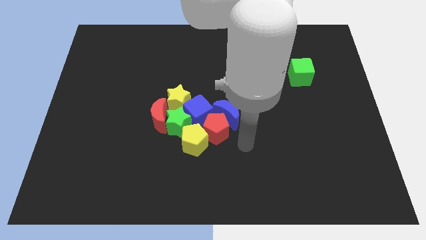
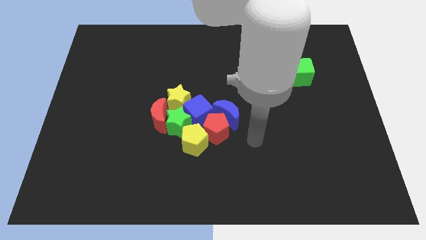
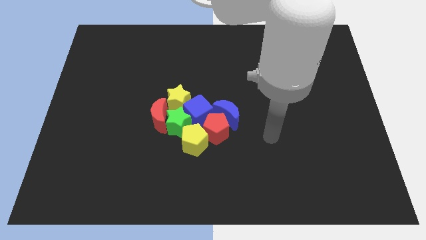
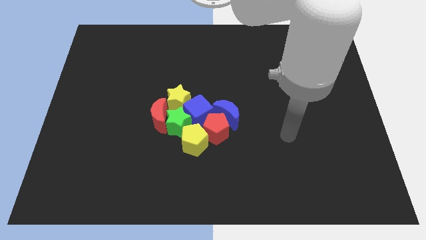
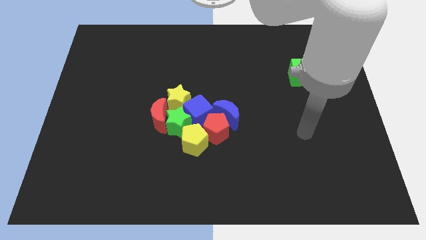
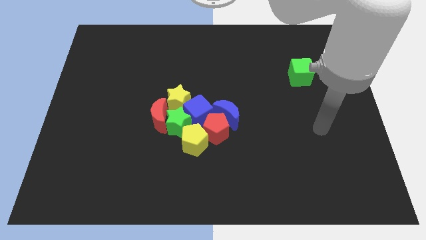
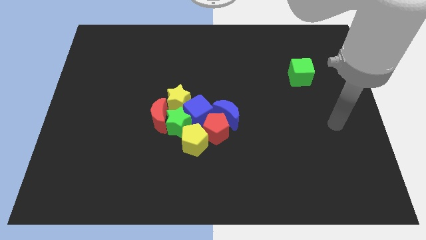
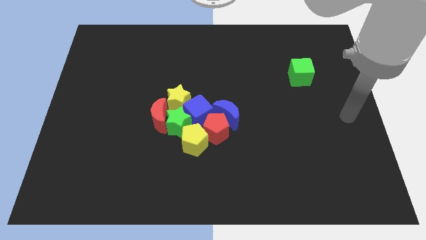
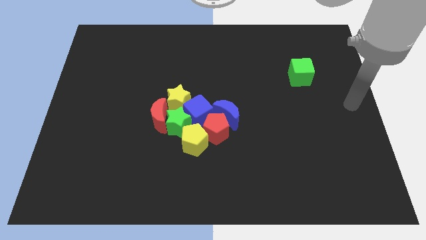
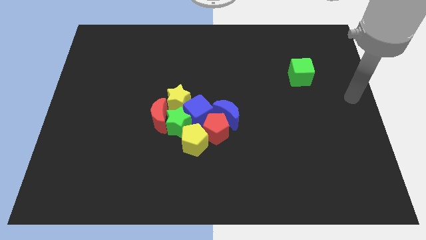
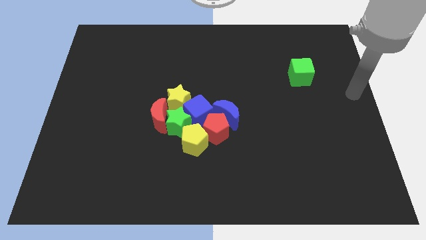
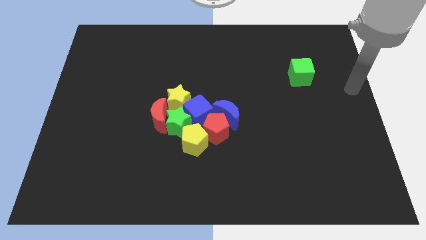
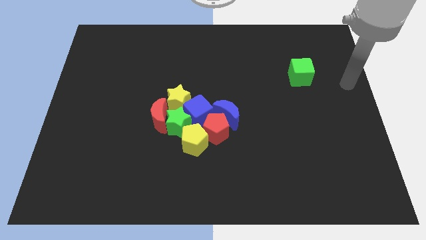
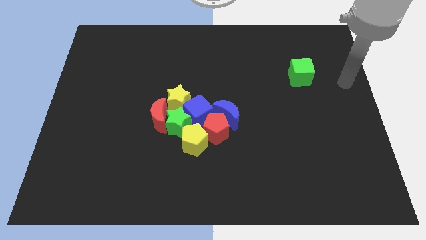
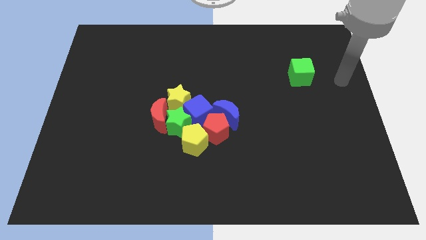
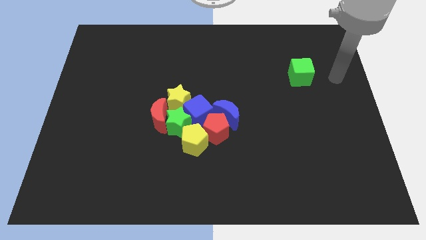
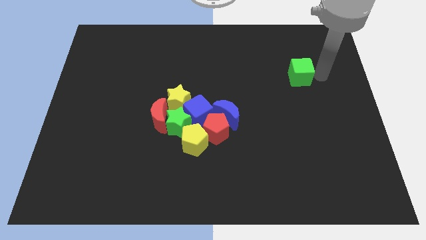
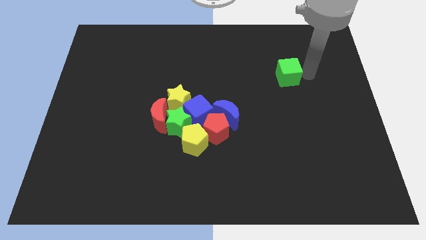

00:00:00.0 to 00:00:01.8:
move your arm away from the blue moon

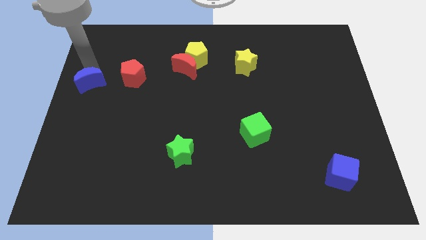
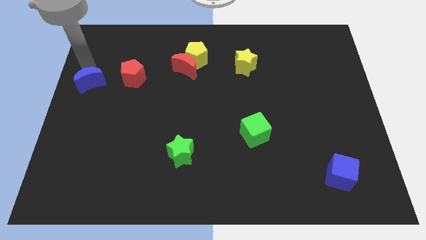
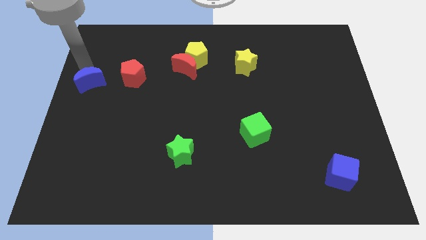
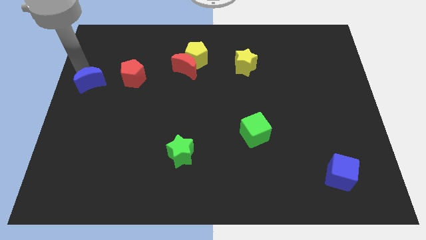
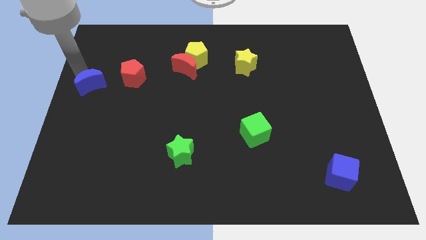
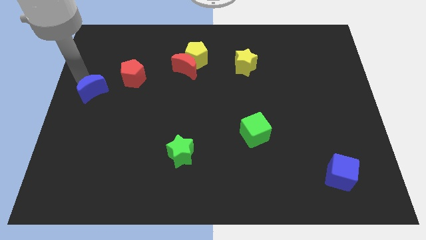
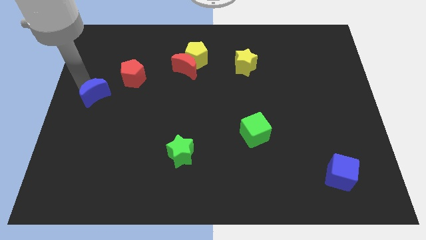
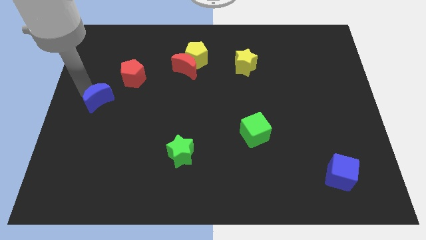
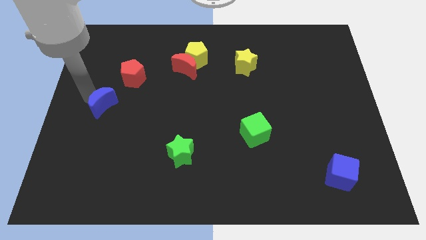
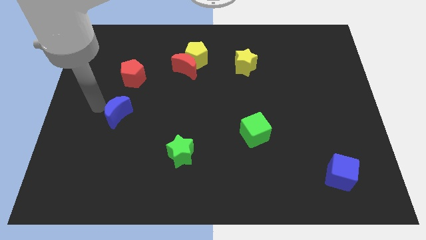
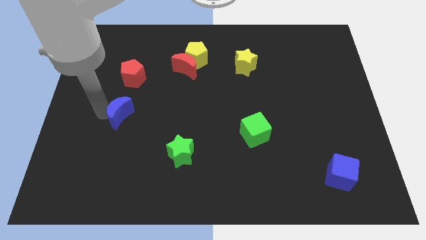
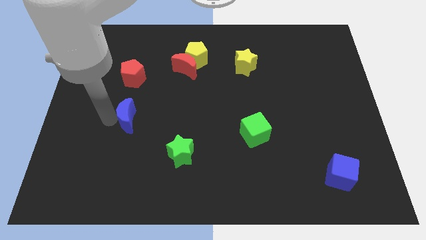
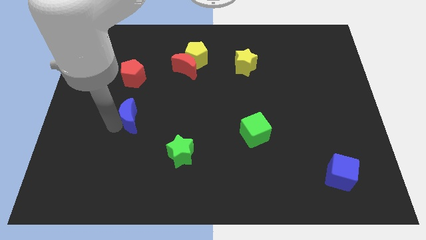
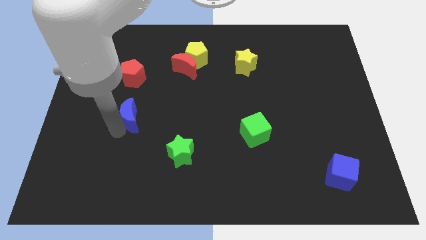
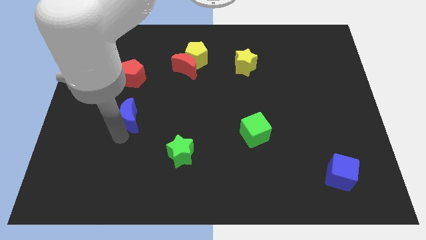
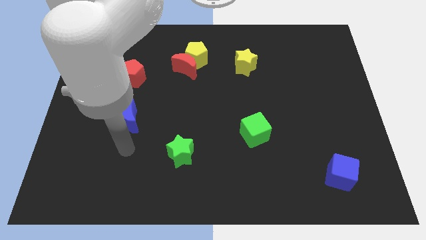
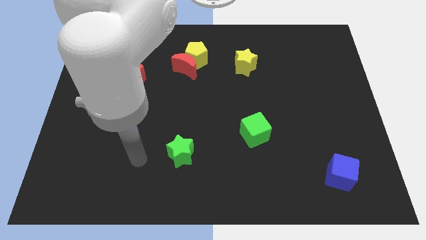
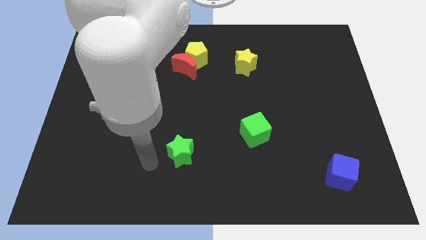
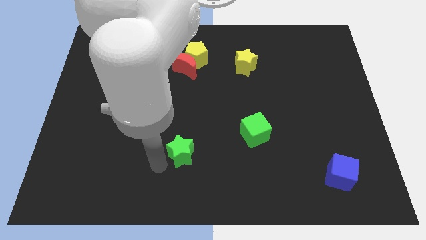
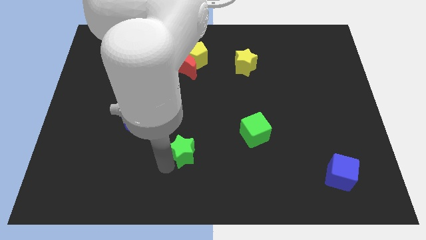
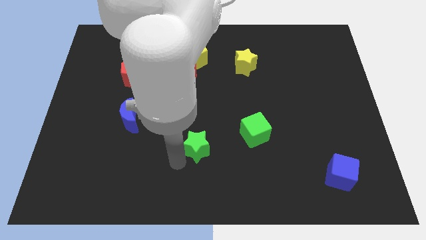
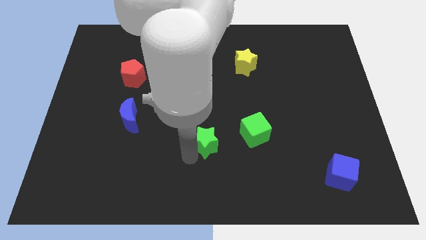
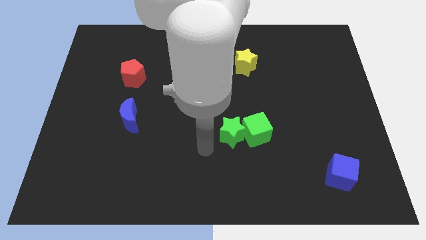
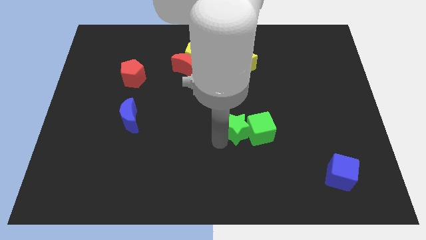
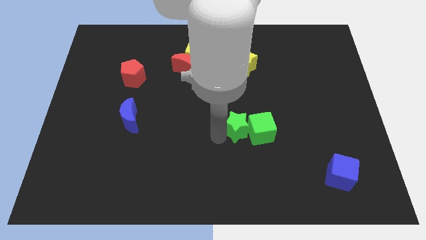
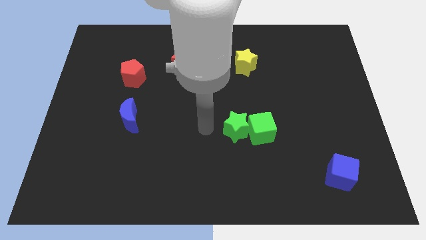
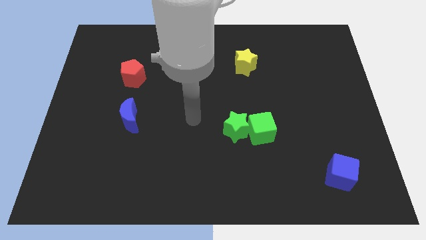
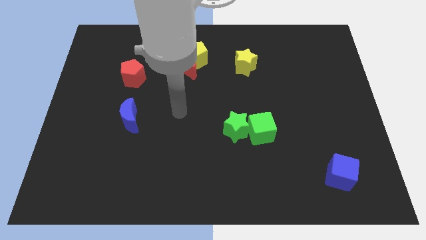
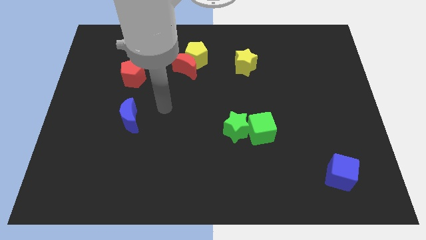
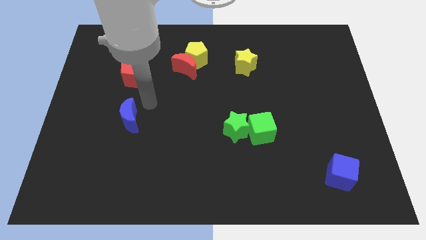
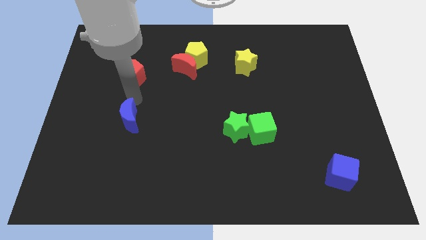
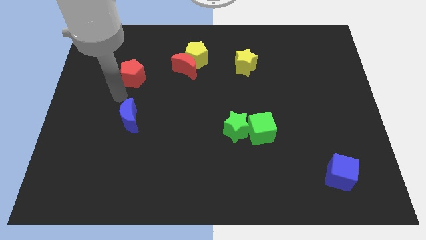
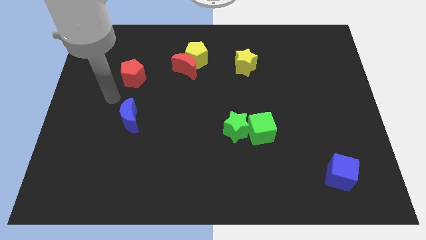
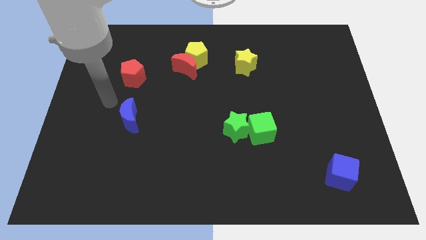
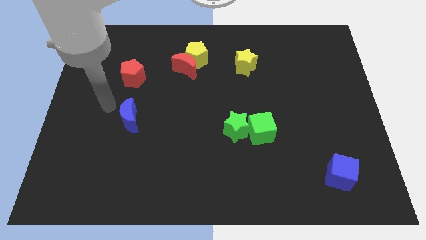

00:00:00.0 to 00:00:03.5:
push the green star into the green cube

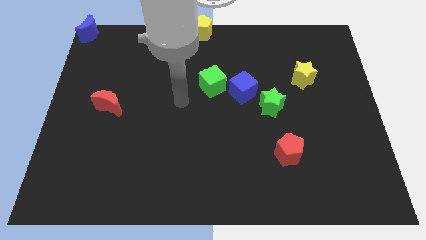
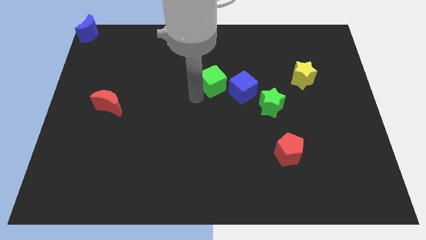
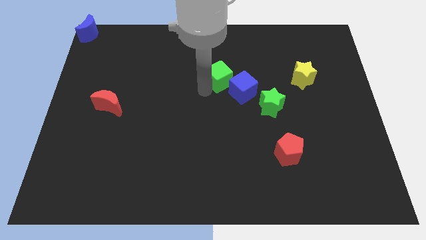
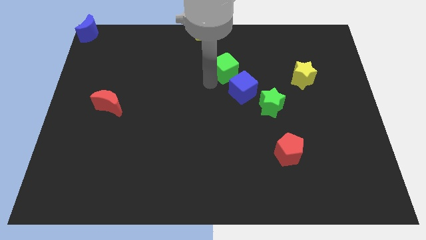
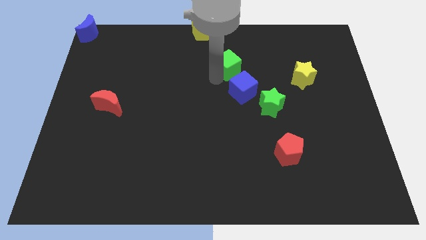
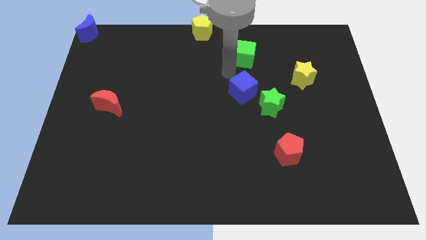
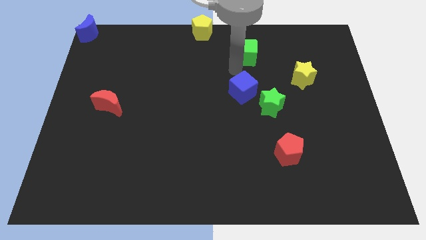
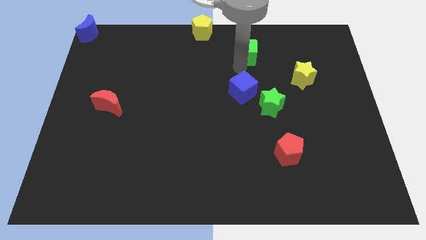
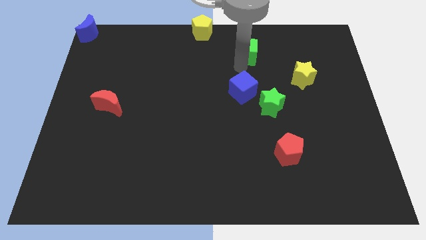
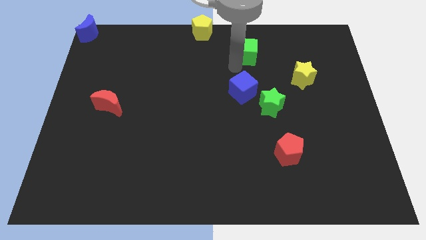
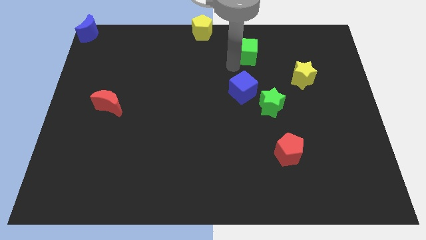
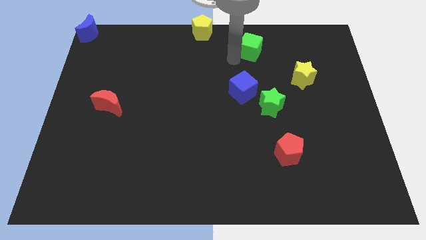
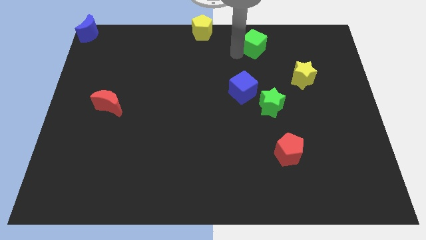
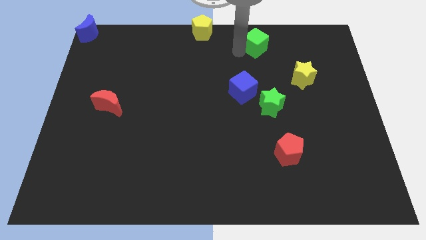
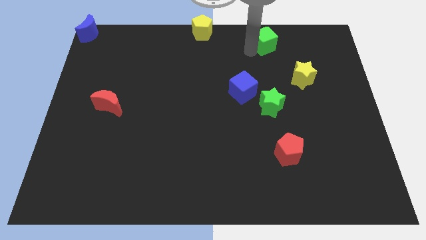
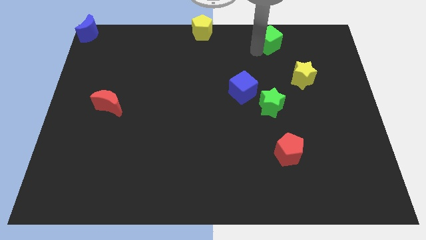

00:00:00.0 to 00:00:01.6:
move the green cube diagonally top right to the blue cube

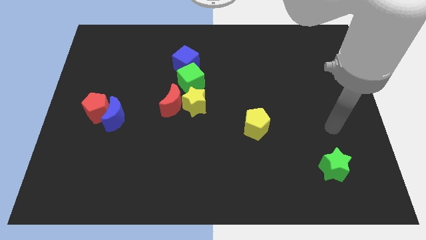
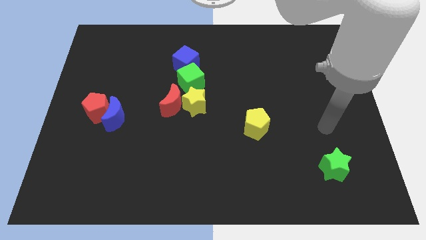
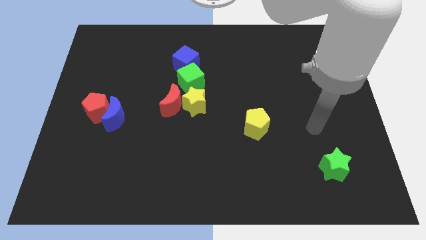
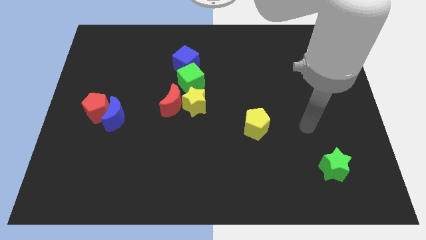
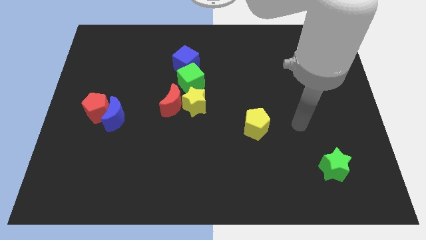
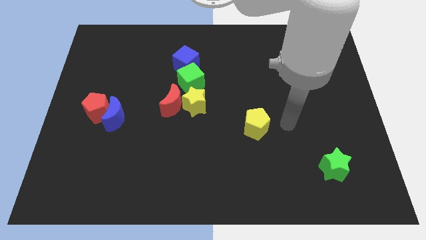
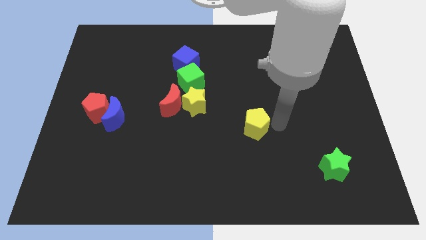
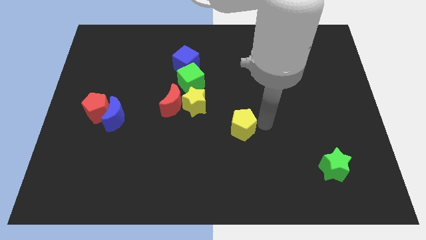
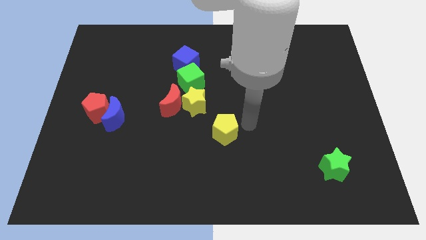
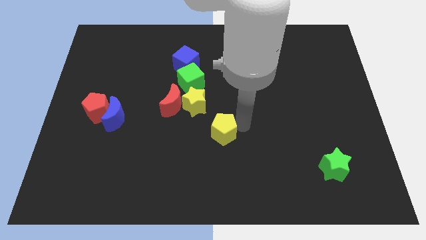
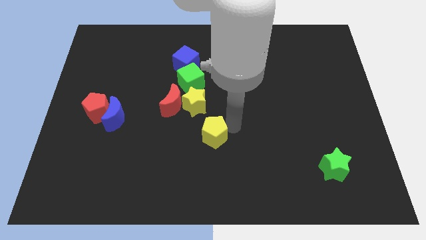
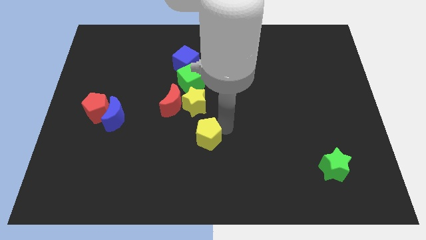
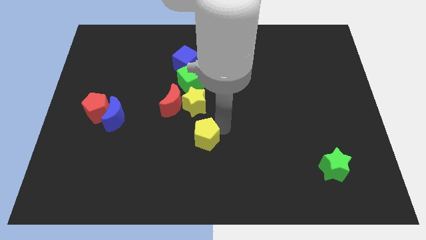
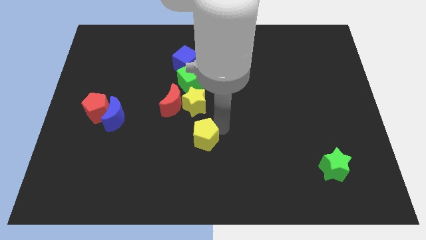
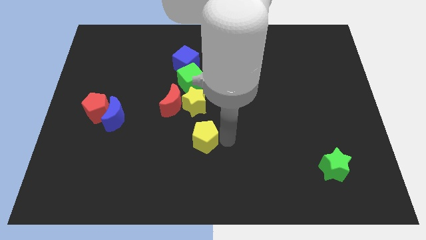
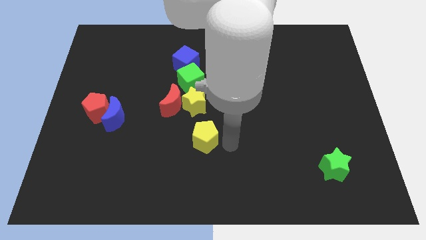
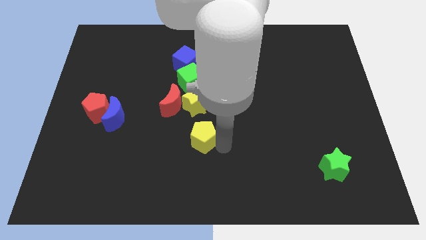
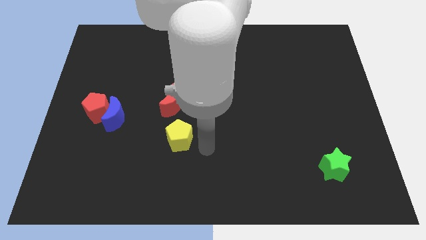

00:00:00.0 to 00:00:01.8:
place the yellow pentagon under the yellow star

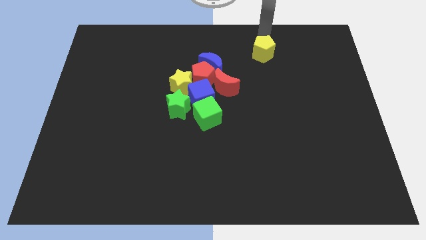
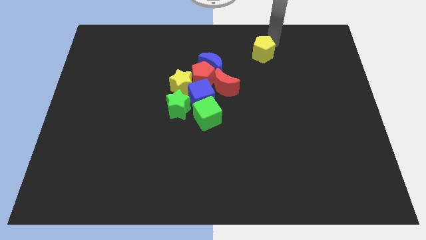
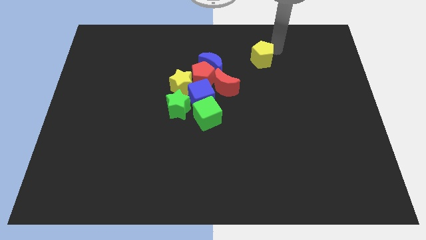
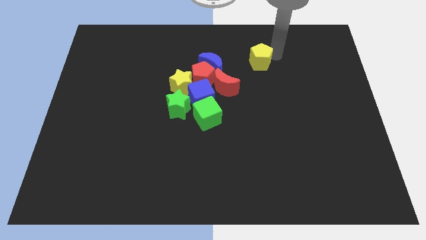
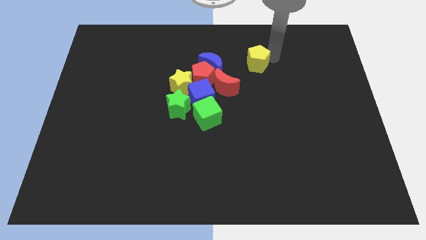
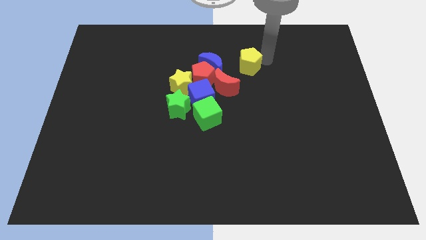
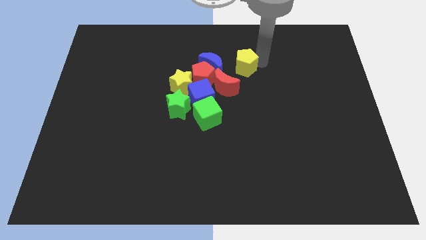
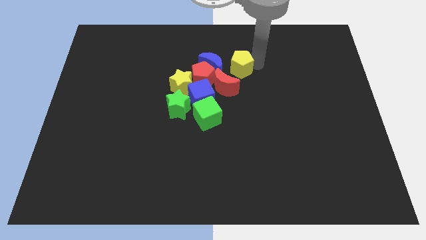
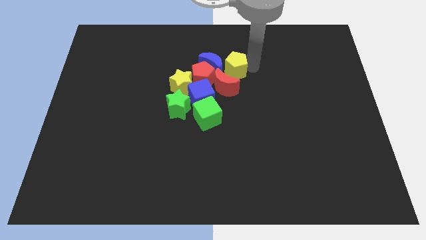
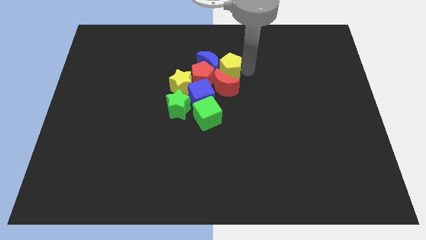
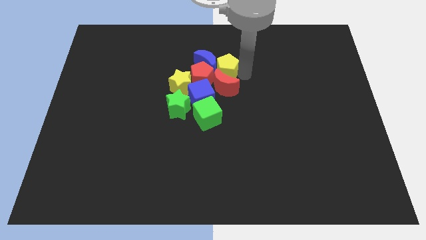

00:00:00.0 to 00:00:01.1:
add yellow pentagon to the group of blocks at the center
